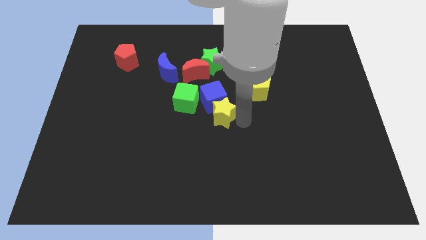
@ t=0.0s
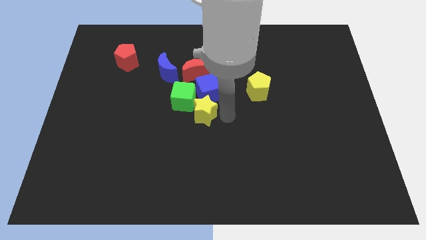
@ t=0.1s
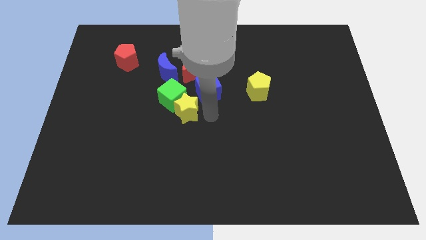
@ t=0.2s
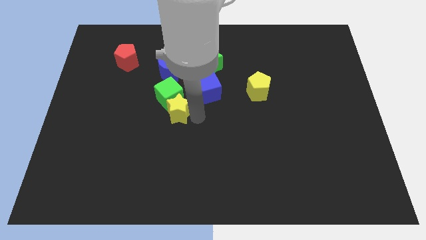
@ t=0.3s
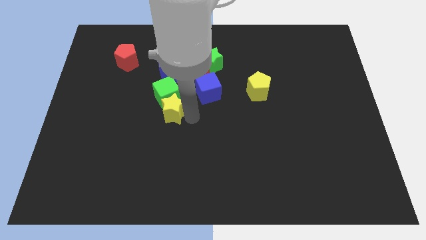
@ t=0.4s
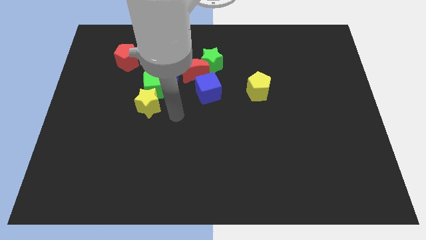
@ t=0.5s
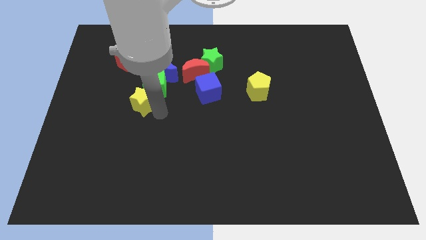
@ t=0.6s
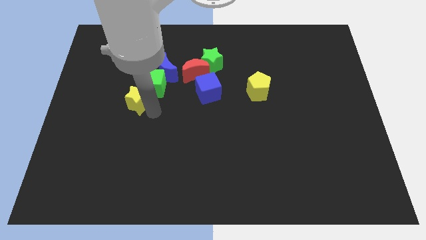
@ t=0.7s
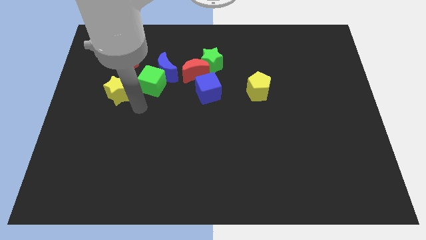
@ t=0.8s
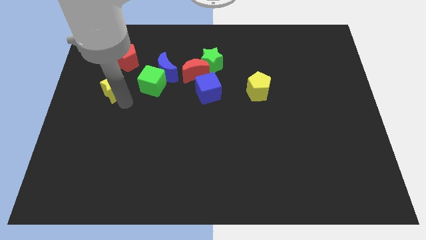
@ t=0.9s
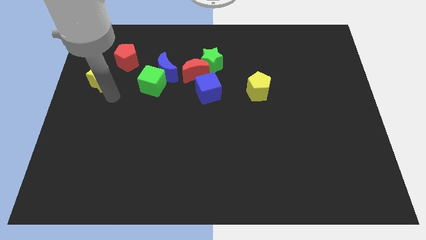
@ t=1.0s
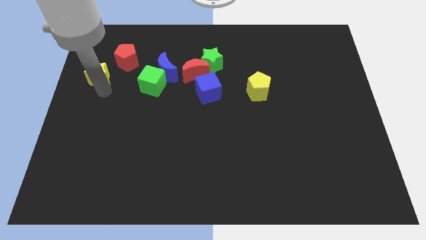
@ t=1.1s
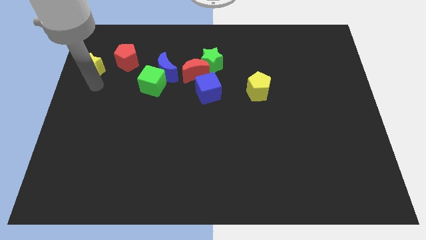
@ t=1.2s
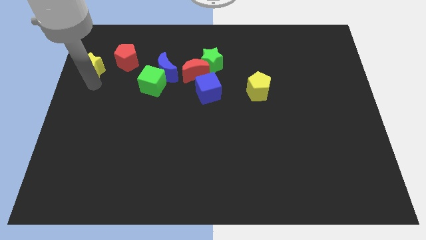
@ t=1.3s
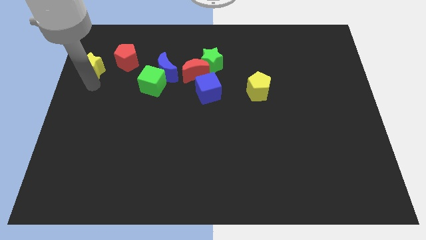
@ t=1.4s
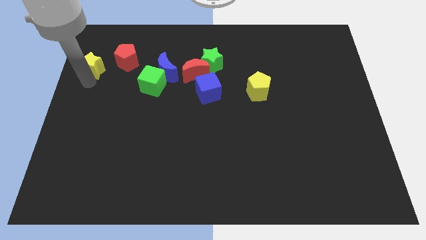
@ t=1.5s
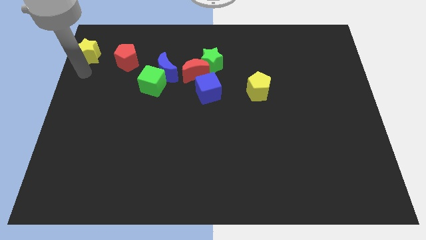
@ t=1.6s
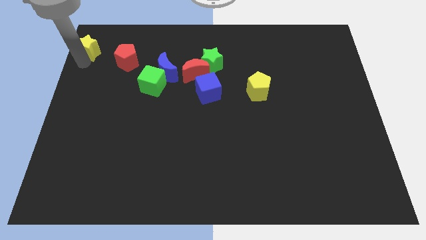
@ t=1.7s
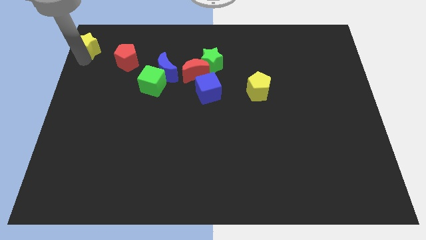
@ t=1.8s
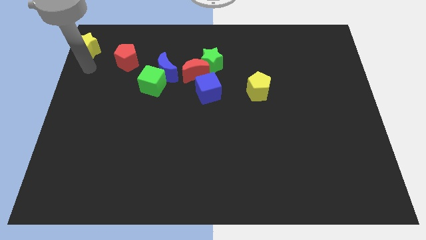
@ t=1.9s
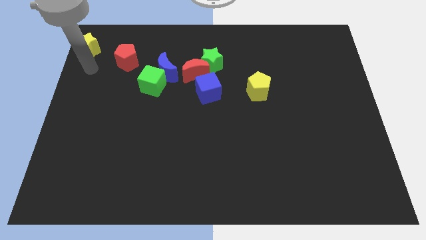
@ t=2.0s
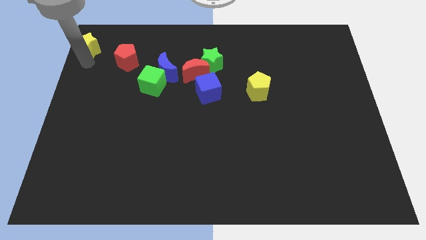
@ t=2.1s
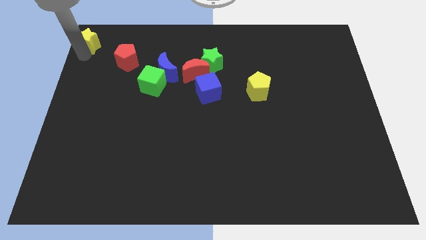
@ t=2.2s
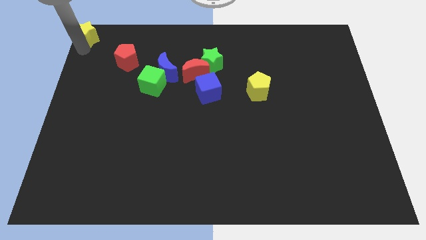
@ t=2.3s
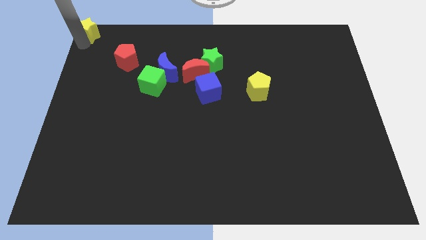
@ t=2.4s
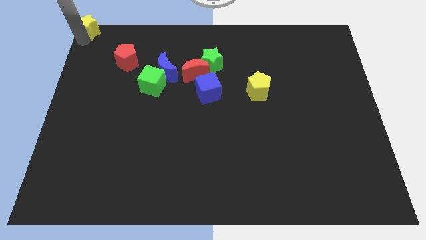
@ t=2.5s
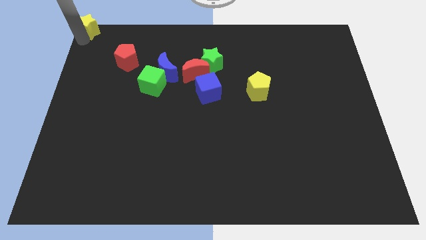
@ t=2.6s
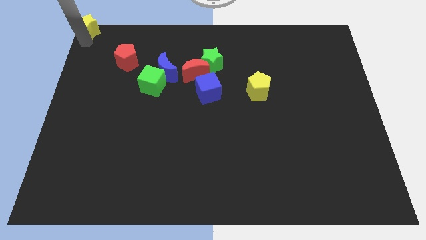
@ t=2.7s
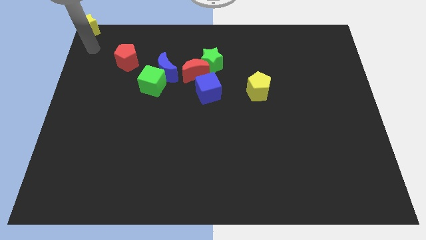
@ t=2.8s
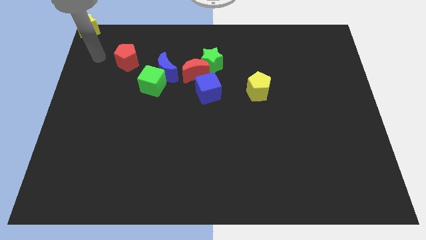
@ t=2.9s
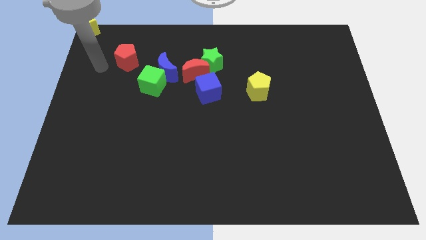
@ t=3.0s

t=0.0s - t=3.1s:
push yellow star towards top left corner of the board

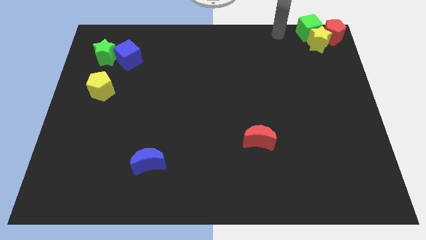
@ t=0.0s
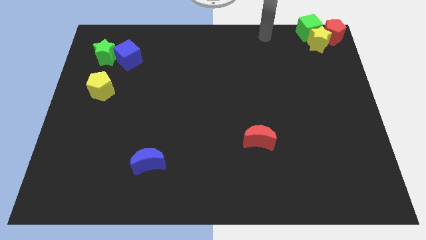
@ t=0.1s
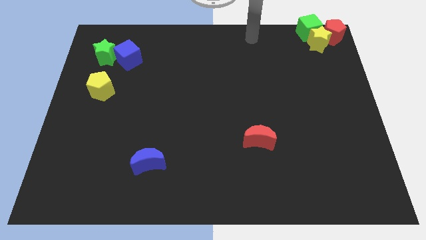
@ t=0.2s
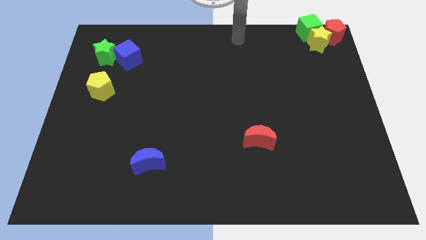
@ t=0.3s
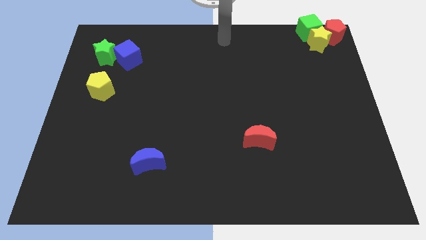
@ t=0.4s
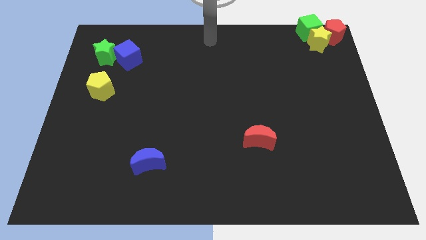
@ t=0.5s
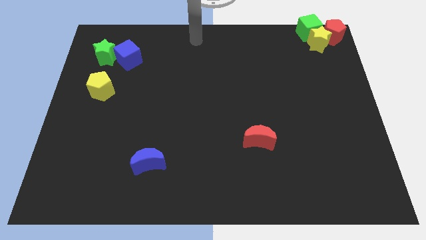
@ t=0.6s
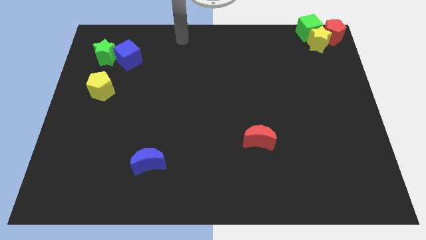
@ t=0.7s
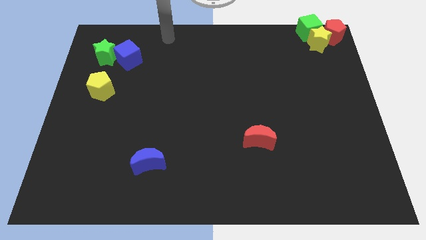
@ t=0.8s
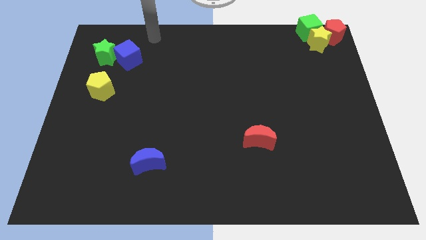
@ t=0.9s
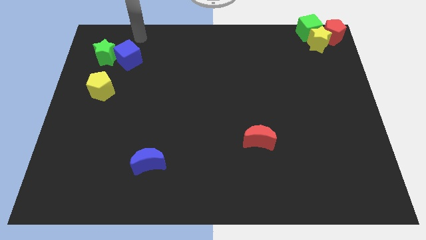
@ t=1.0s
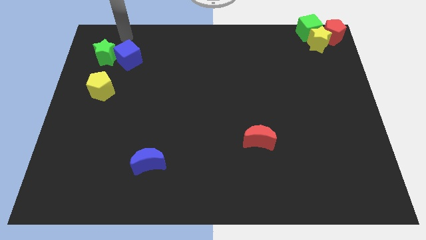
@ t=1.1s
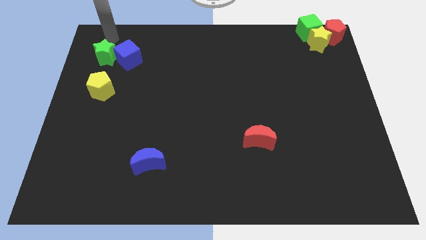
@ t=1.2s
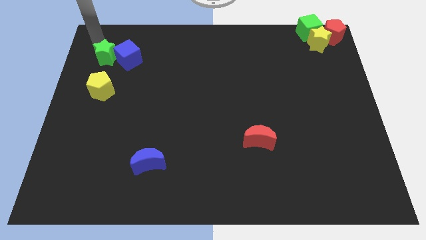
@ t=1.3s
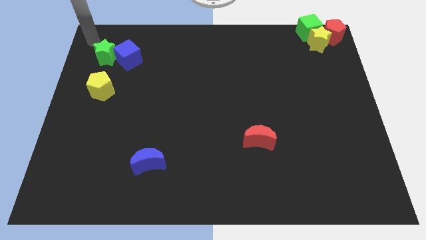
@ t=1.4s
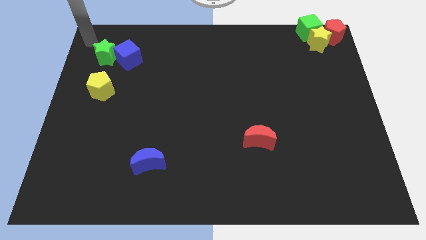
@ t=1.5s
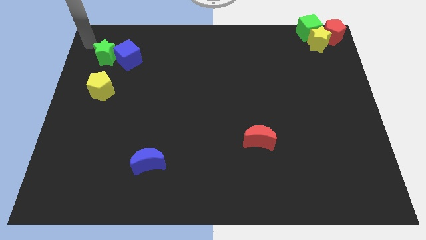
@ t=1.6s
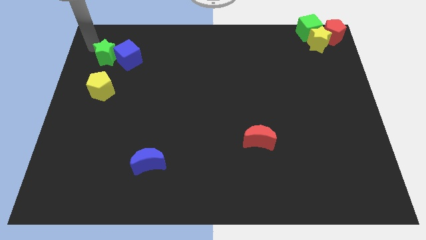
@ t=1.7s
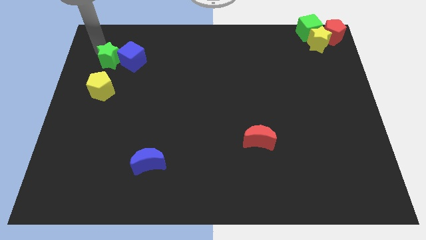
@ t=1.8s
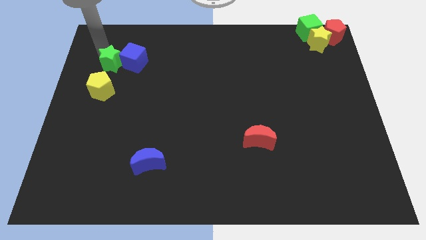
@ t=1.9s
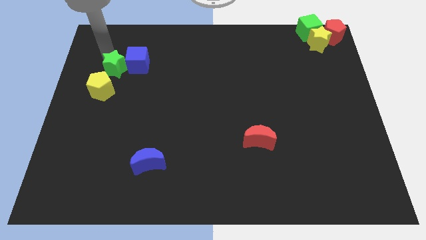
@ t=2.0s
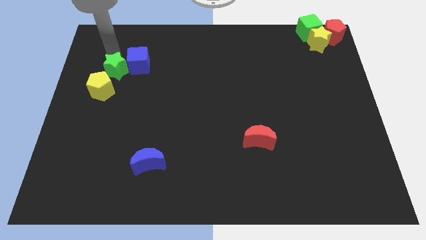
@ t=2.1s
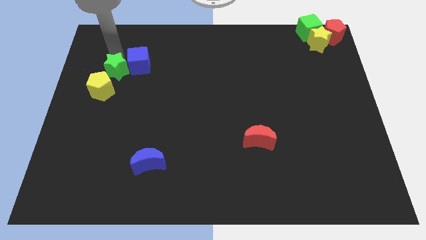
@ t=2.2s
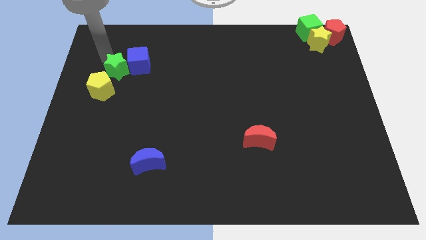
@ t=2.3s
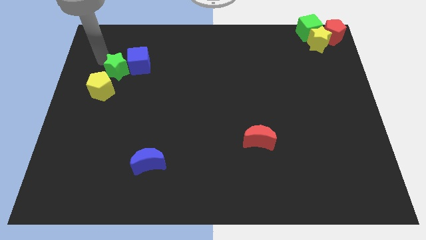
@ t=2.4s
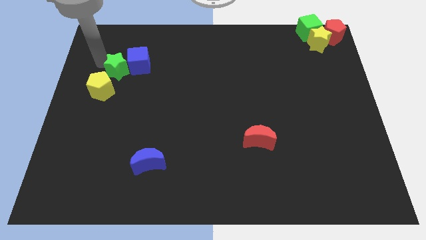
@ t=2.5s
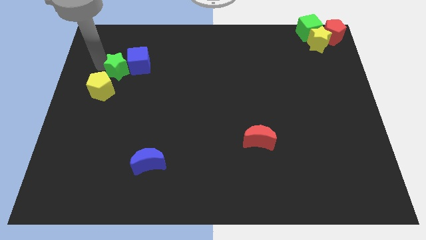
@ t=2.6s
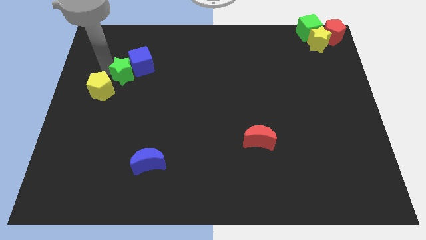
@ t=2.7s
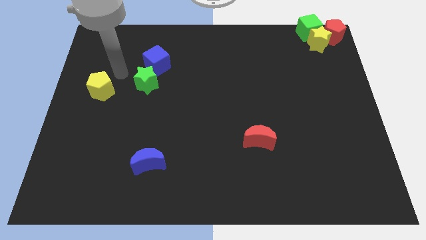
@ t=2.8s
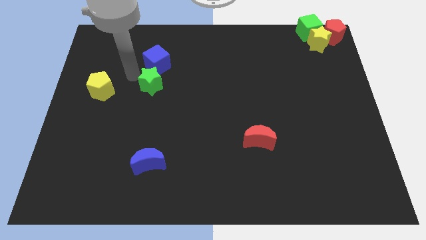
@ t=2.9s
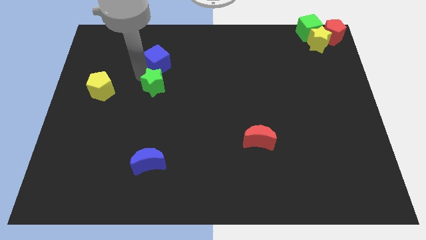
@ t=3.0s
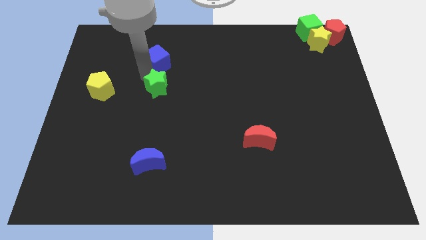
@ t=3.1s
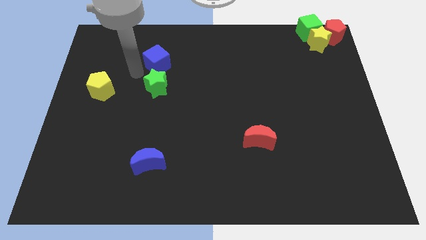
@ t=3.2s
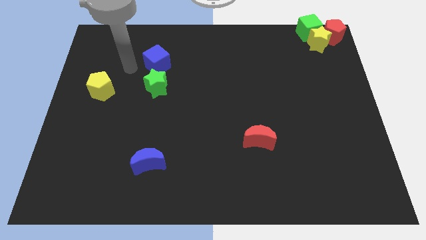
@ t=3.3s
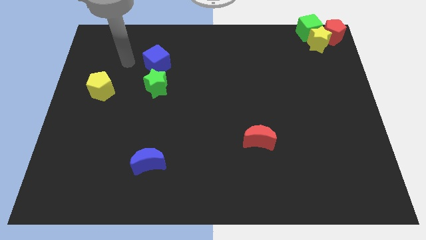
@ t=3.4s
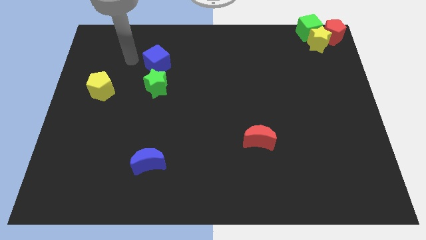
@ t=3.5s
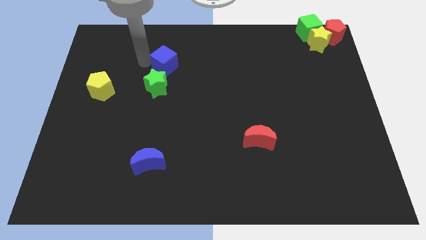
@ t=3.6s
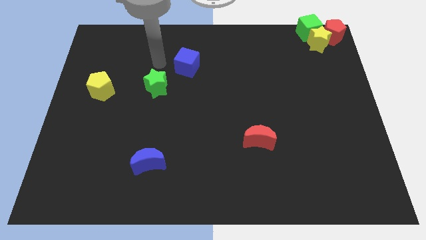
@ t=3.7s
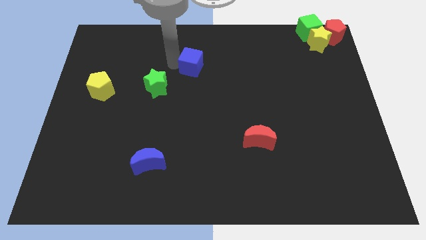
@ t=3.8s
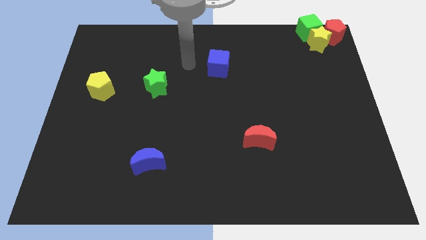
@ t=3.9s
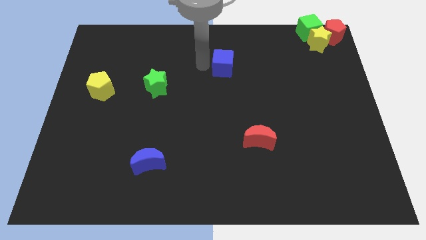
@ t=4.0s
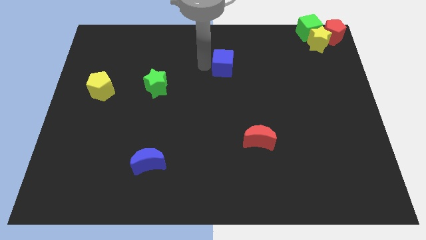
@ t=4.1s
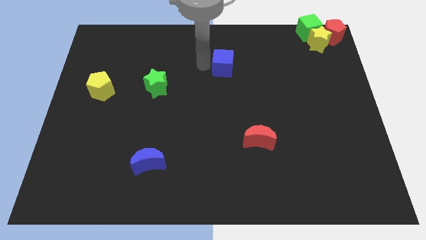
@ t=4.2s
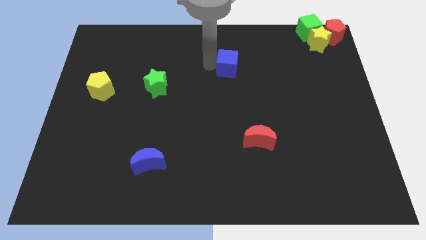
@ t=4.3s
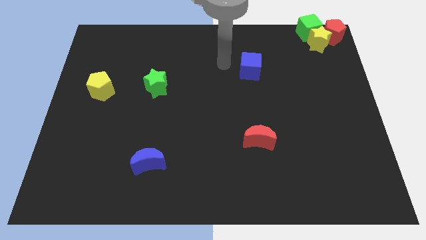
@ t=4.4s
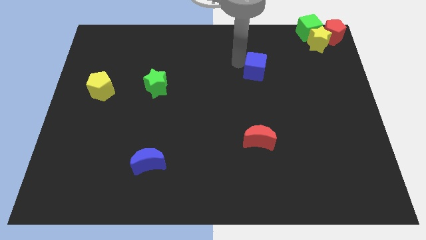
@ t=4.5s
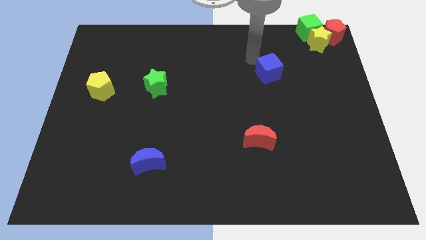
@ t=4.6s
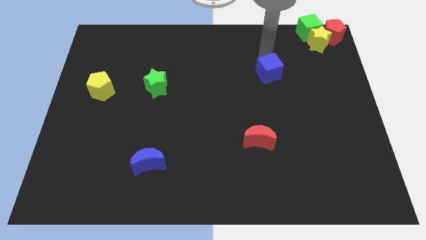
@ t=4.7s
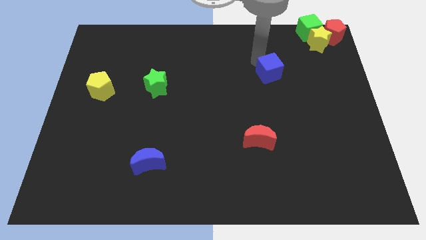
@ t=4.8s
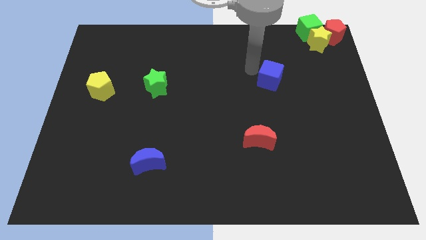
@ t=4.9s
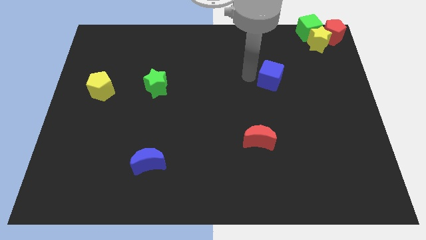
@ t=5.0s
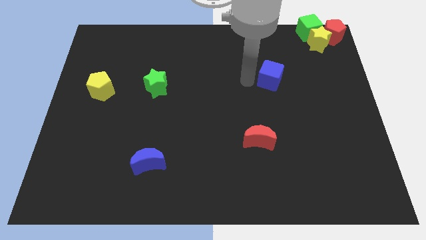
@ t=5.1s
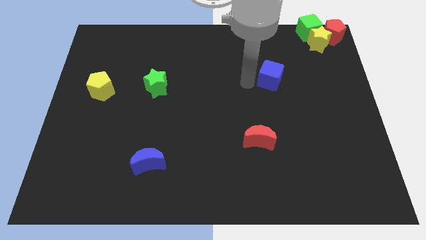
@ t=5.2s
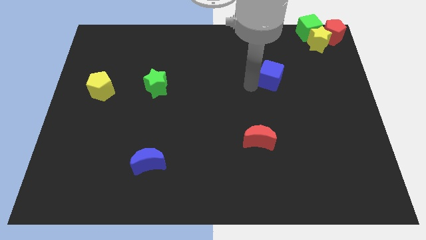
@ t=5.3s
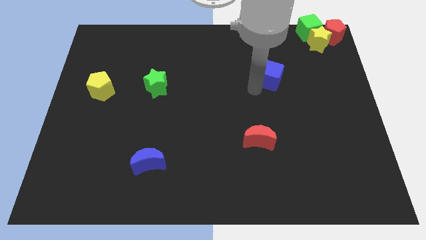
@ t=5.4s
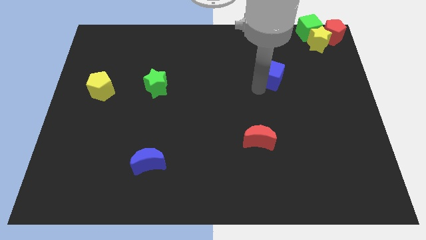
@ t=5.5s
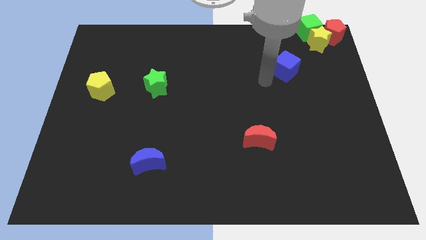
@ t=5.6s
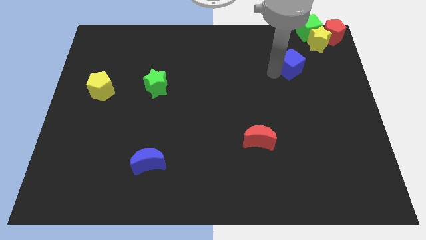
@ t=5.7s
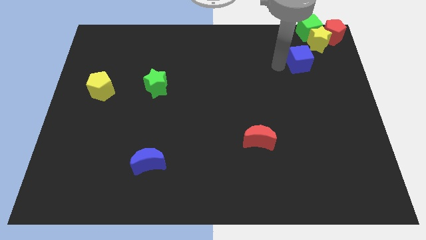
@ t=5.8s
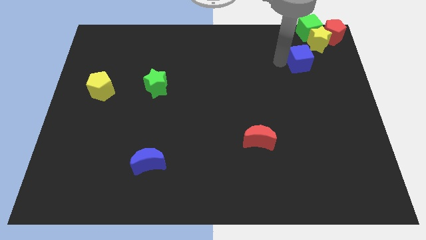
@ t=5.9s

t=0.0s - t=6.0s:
separate green star and blue cube
